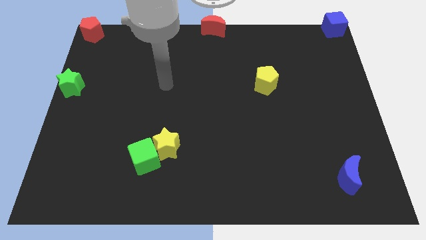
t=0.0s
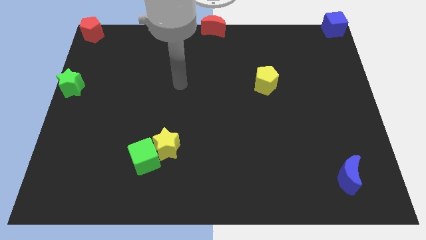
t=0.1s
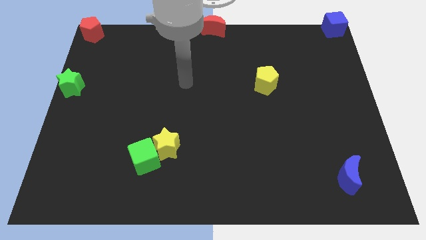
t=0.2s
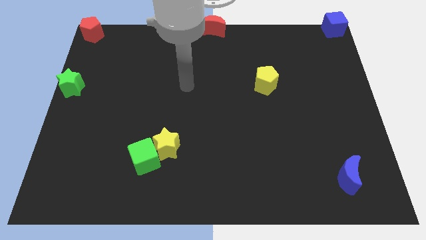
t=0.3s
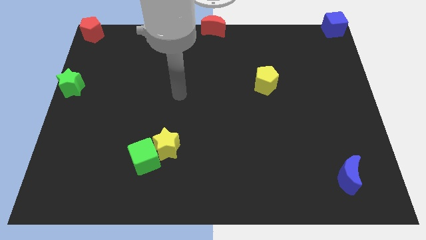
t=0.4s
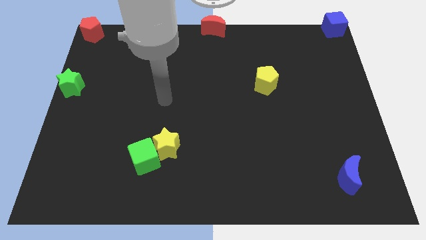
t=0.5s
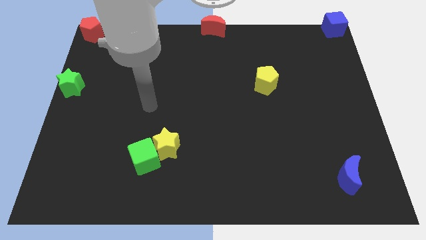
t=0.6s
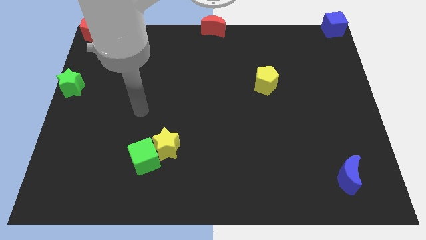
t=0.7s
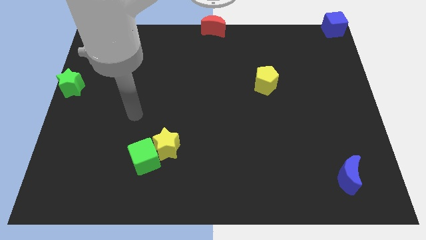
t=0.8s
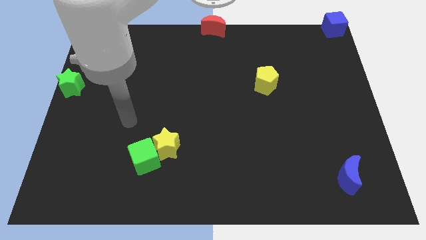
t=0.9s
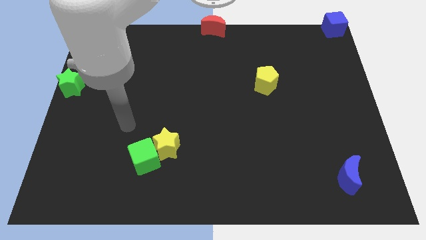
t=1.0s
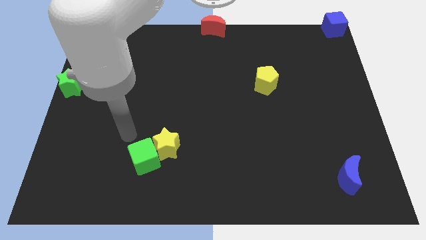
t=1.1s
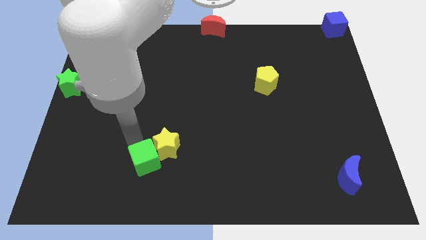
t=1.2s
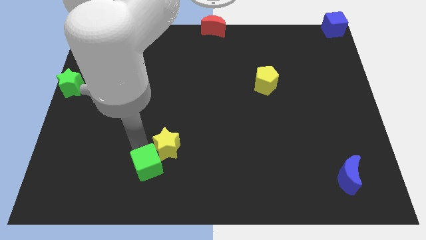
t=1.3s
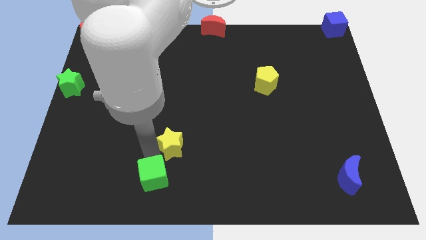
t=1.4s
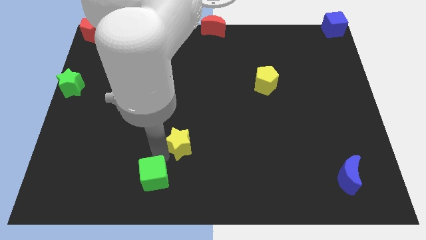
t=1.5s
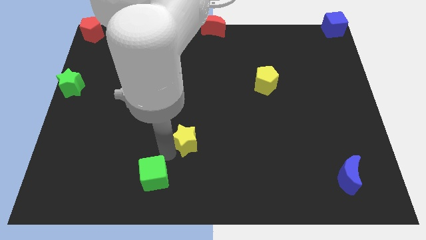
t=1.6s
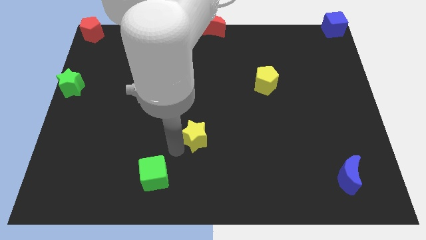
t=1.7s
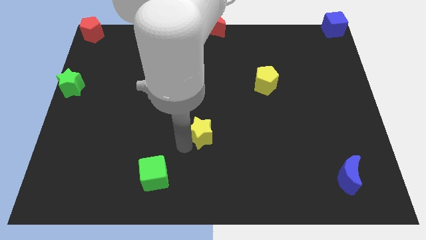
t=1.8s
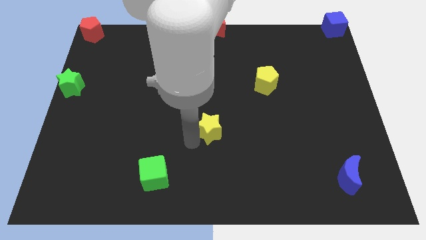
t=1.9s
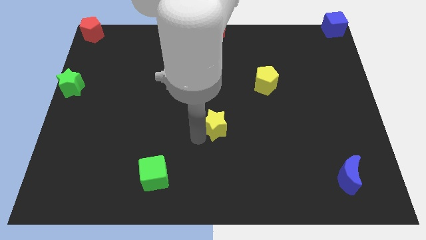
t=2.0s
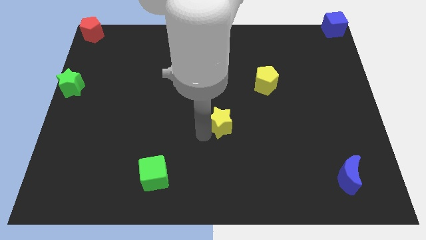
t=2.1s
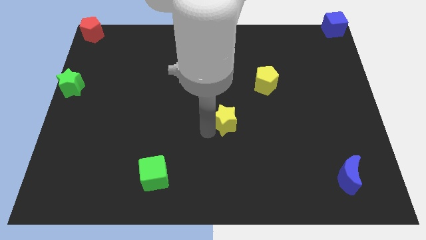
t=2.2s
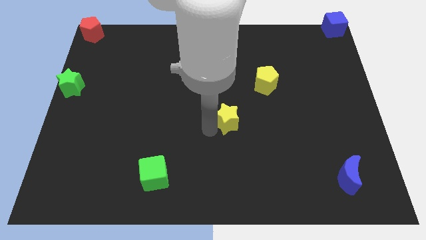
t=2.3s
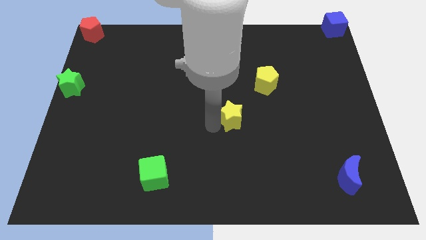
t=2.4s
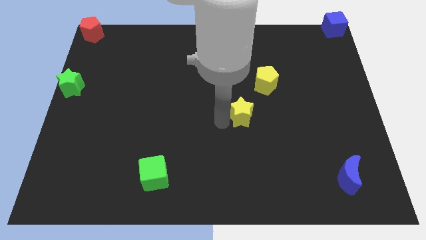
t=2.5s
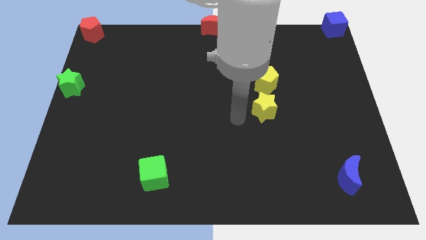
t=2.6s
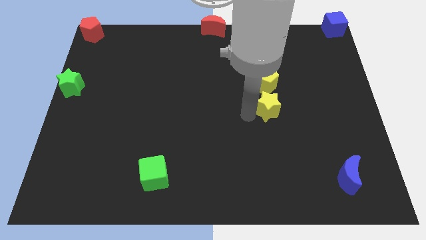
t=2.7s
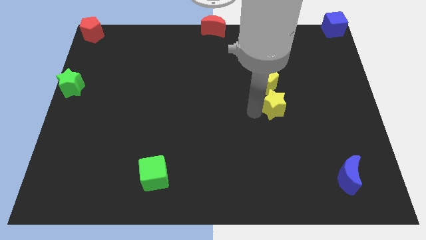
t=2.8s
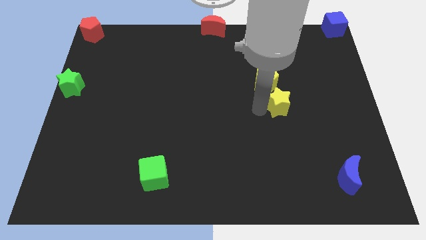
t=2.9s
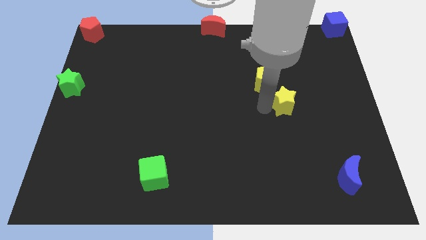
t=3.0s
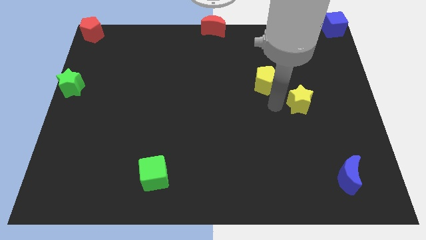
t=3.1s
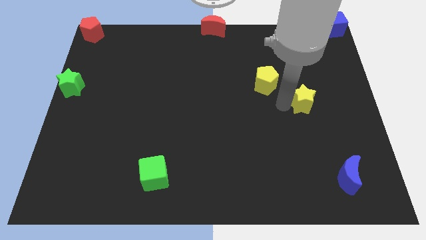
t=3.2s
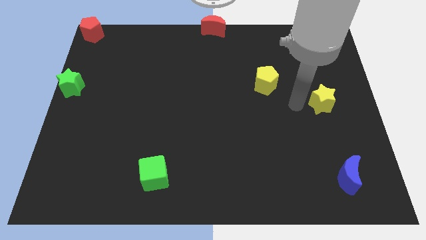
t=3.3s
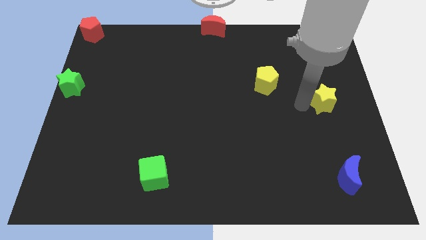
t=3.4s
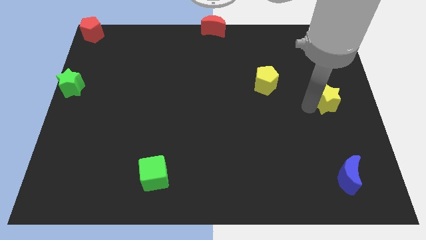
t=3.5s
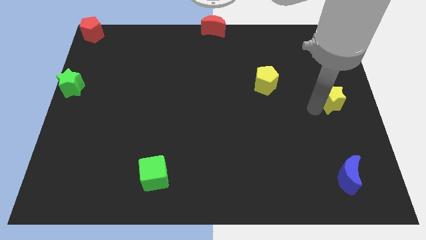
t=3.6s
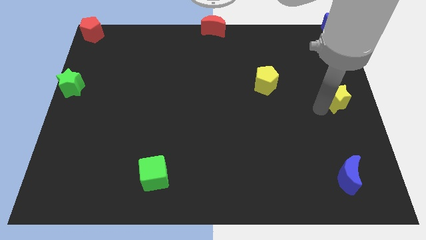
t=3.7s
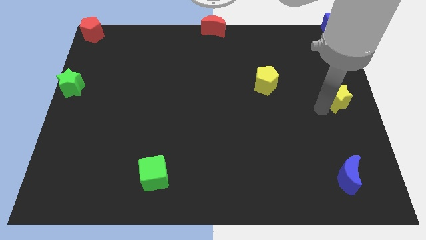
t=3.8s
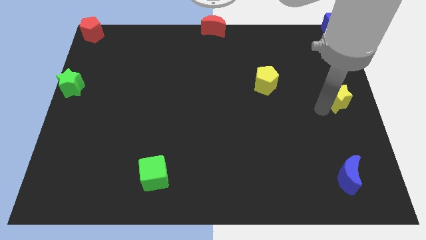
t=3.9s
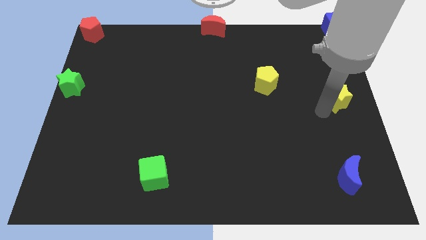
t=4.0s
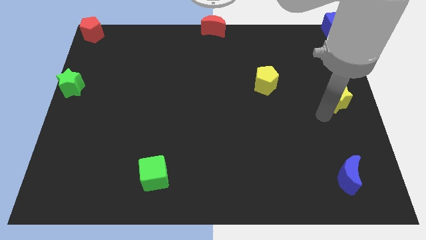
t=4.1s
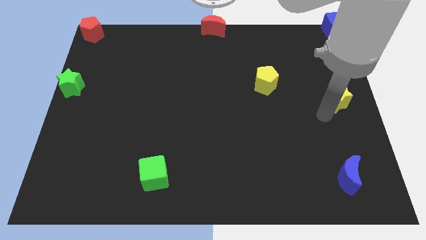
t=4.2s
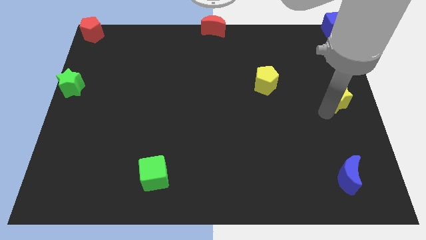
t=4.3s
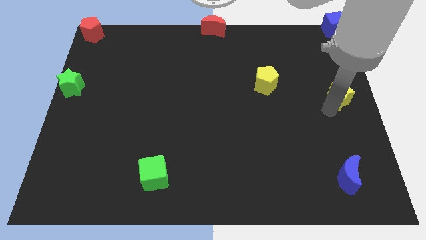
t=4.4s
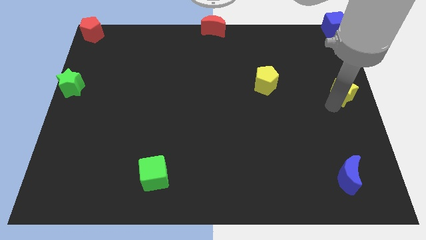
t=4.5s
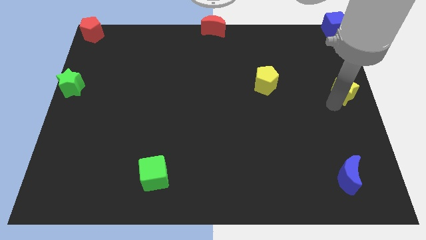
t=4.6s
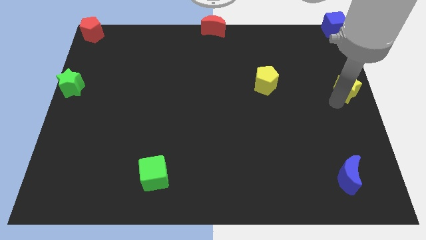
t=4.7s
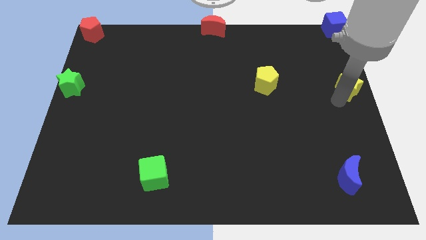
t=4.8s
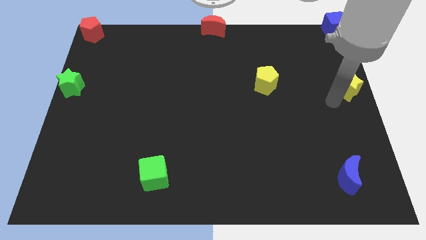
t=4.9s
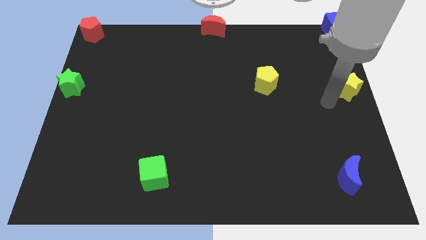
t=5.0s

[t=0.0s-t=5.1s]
separate yellow star from green cube

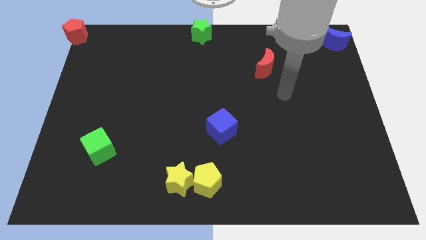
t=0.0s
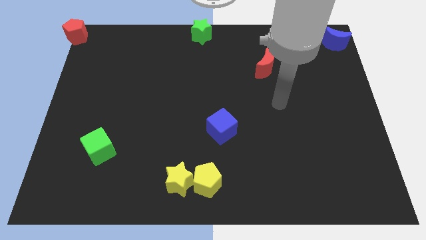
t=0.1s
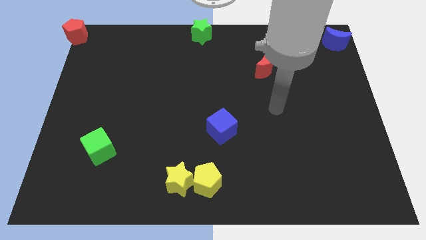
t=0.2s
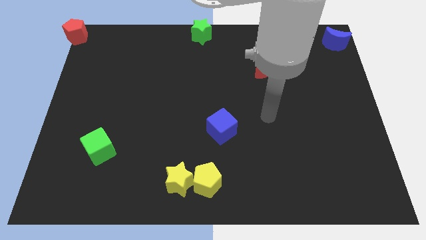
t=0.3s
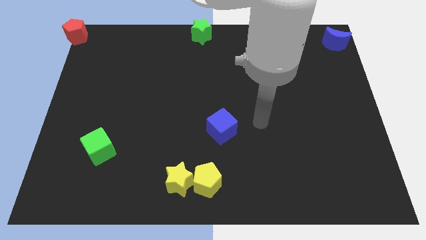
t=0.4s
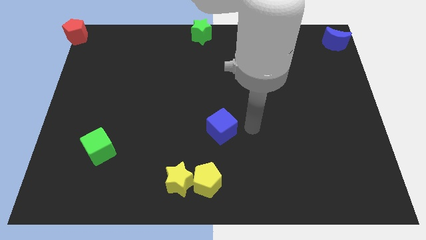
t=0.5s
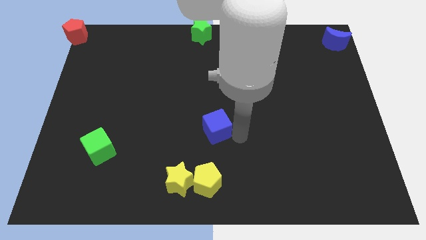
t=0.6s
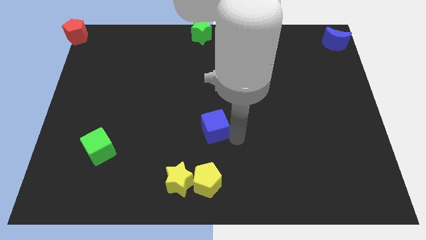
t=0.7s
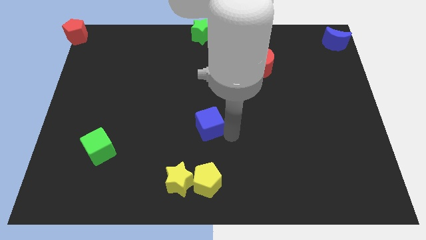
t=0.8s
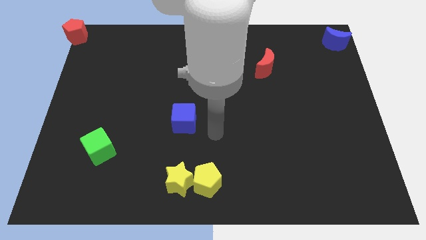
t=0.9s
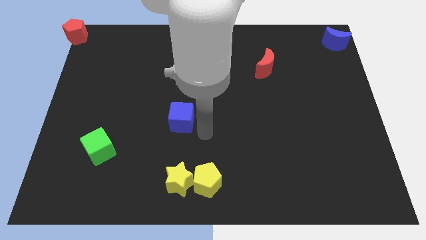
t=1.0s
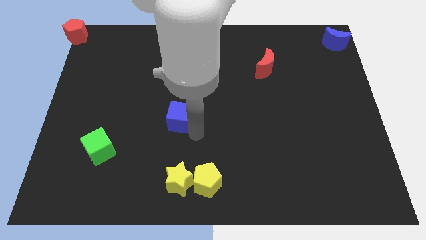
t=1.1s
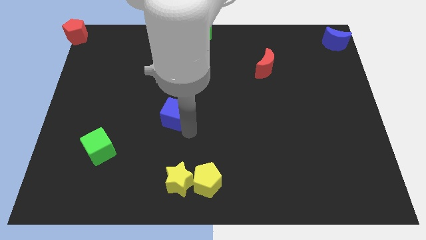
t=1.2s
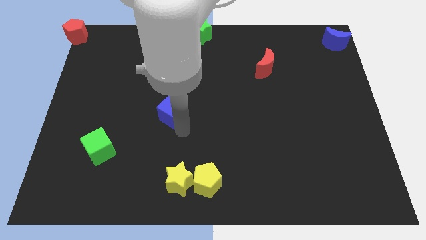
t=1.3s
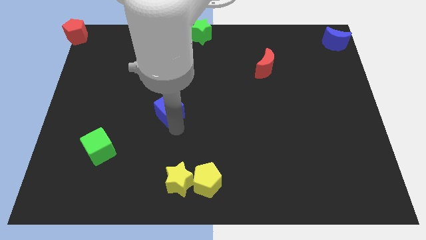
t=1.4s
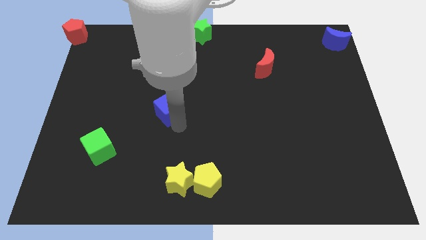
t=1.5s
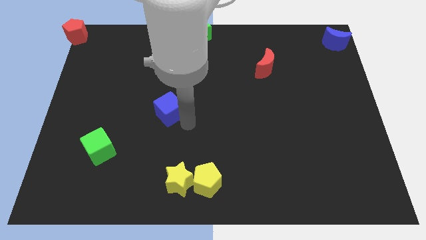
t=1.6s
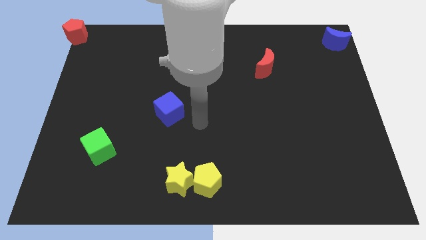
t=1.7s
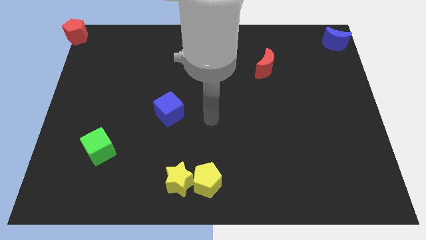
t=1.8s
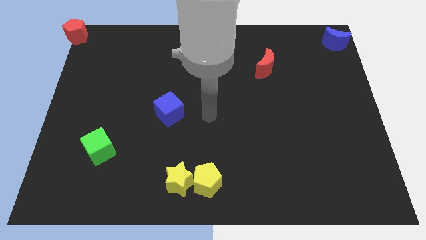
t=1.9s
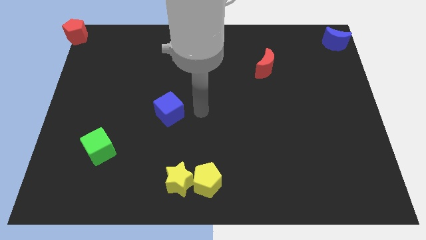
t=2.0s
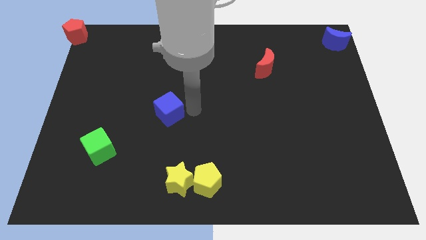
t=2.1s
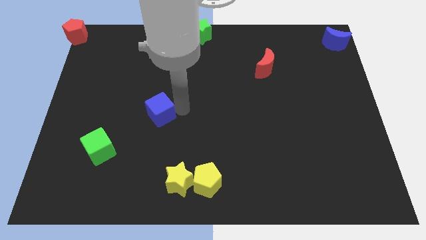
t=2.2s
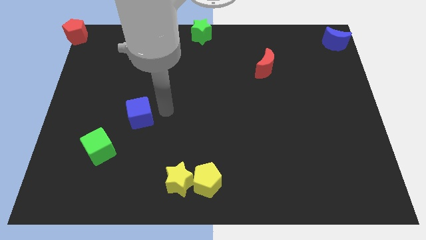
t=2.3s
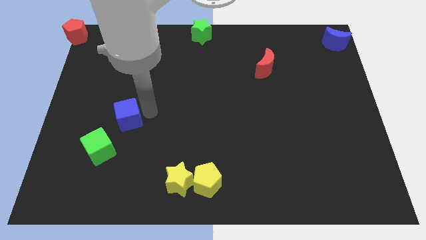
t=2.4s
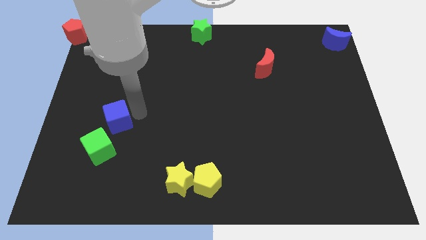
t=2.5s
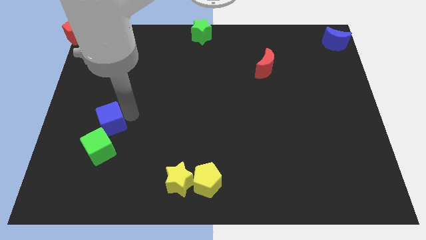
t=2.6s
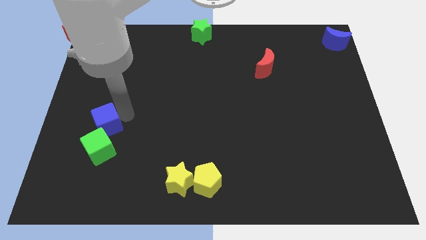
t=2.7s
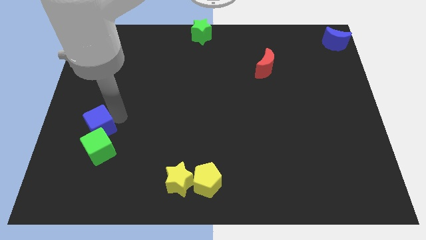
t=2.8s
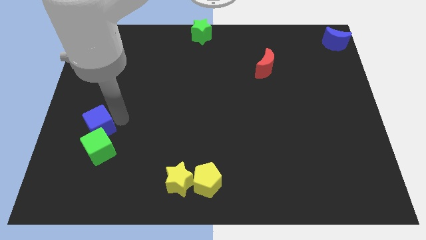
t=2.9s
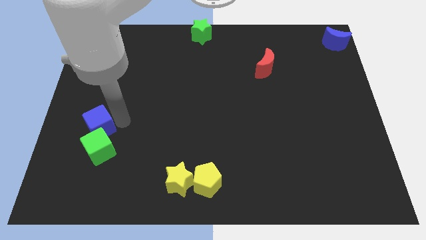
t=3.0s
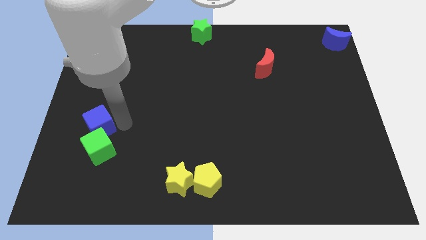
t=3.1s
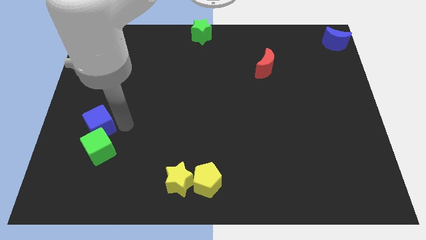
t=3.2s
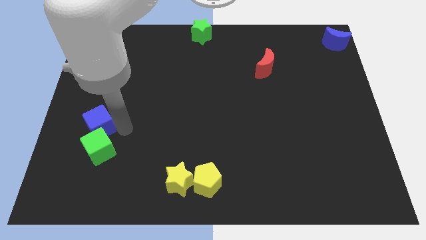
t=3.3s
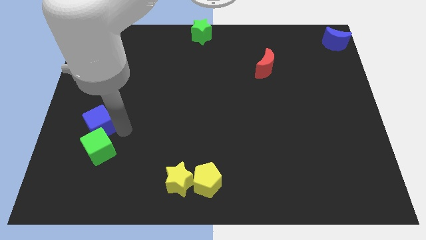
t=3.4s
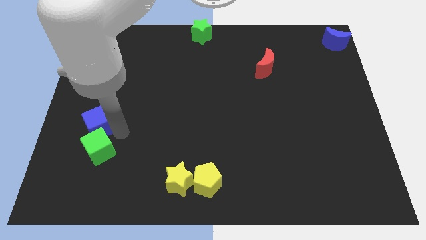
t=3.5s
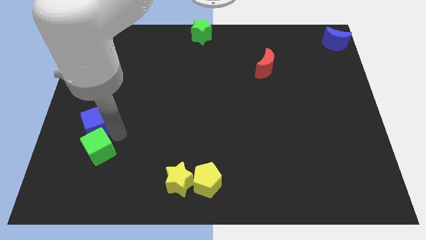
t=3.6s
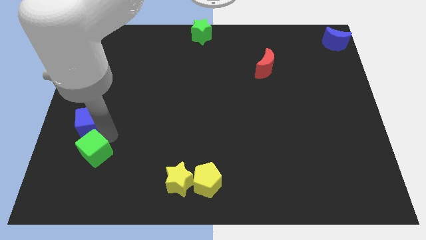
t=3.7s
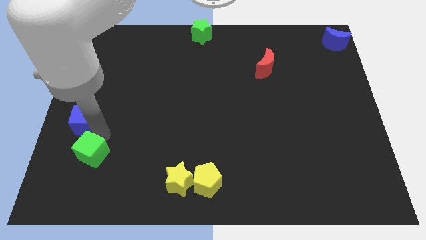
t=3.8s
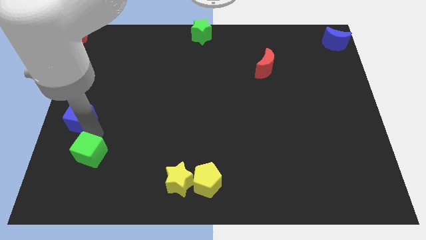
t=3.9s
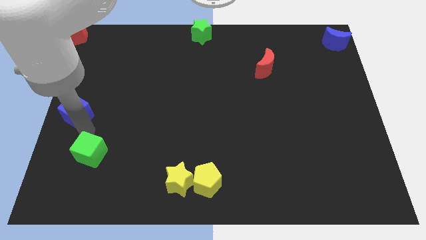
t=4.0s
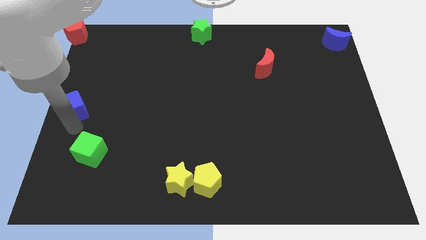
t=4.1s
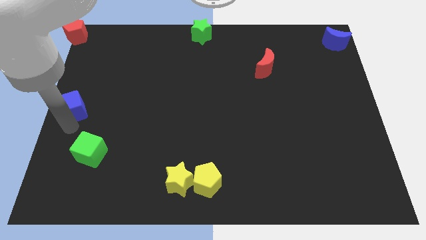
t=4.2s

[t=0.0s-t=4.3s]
place the blue cube above the green cube
